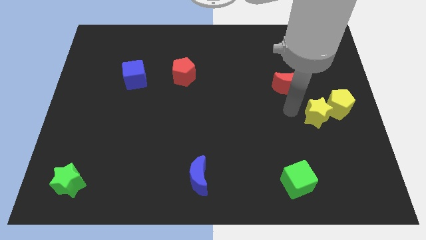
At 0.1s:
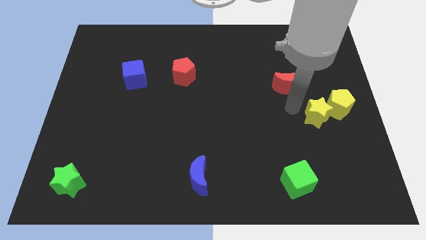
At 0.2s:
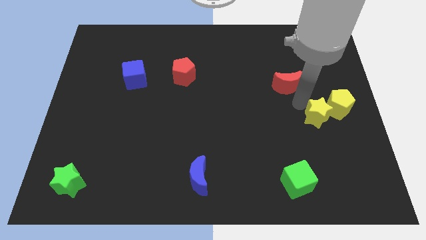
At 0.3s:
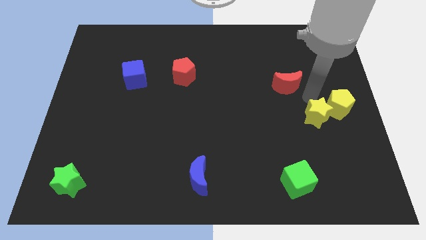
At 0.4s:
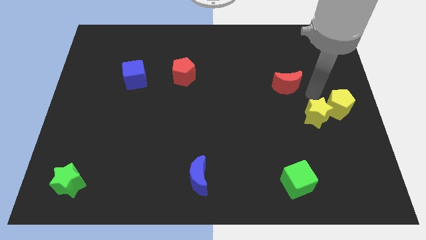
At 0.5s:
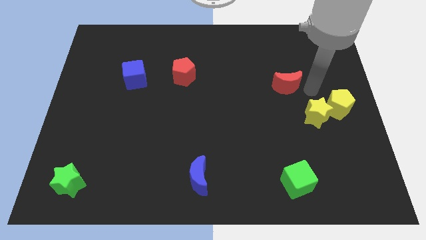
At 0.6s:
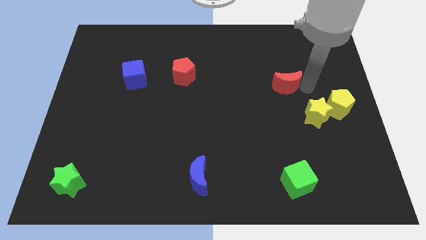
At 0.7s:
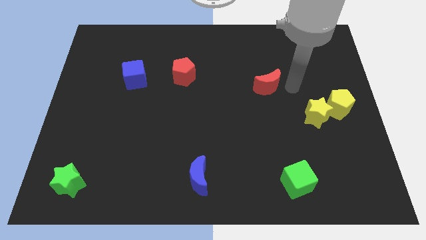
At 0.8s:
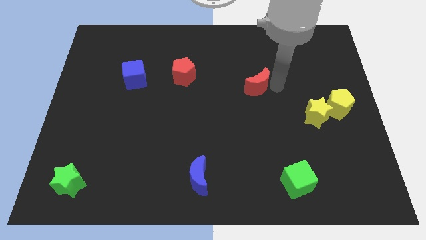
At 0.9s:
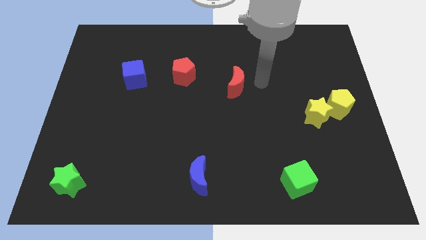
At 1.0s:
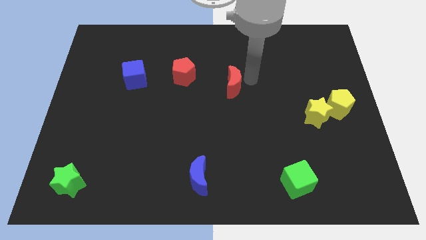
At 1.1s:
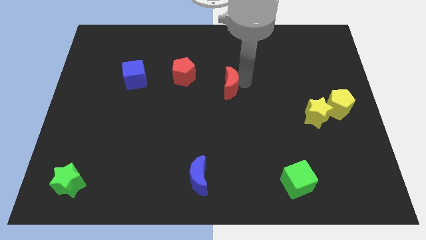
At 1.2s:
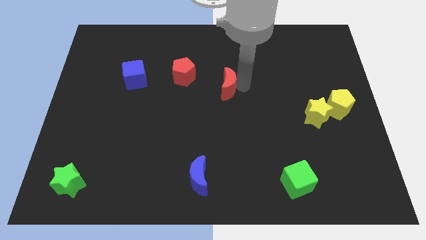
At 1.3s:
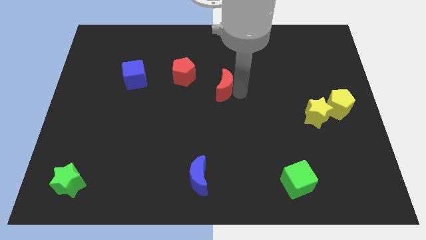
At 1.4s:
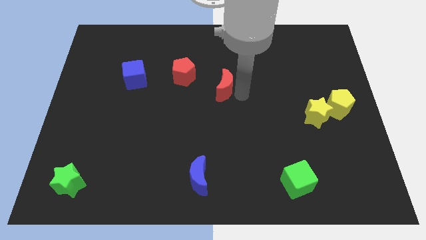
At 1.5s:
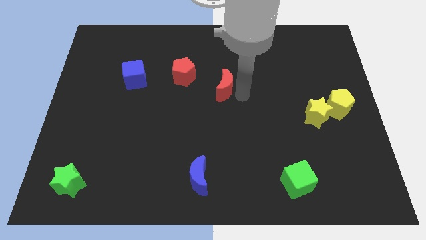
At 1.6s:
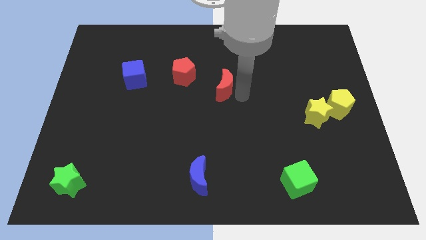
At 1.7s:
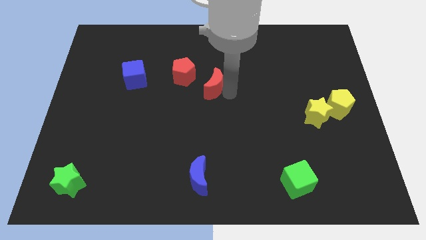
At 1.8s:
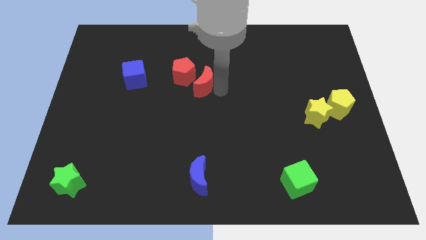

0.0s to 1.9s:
move the red moon to the bottom right side of the red pentagon

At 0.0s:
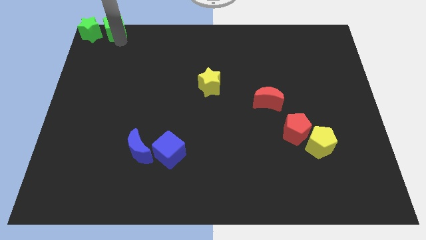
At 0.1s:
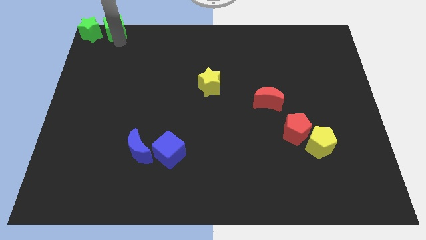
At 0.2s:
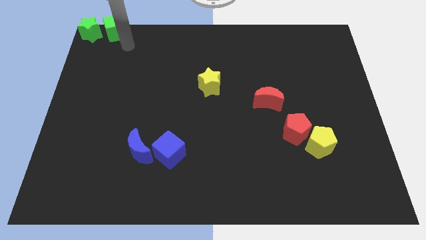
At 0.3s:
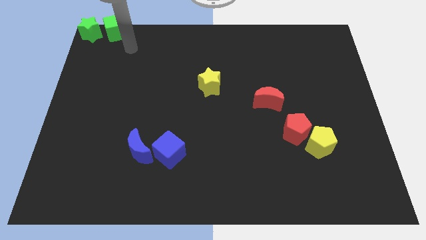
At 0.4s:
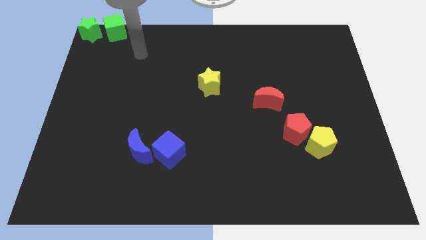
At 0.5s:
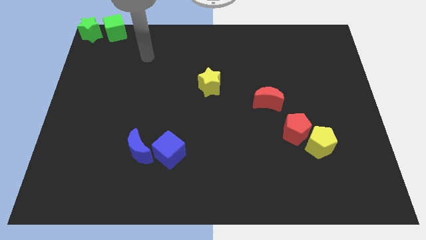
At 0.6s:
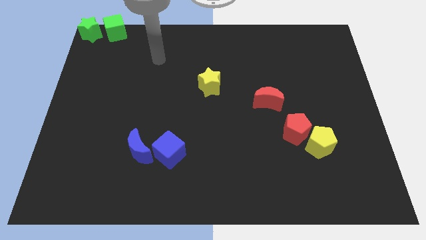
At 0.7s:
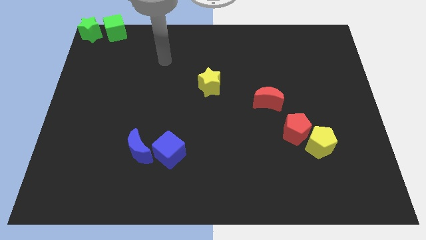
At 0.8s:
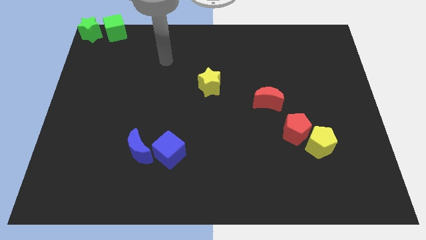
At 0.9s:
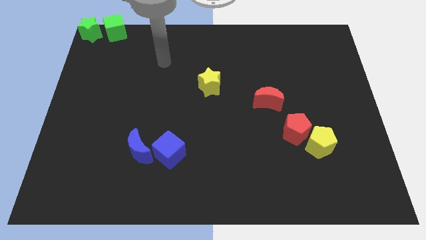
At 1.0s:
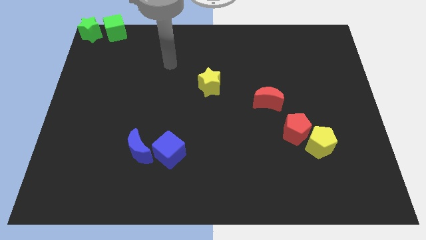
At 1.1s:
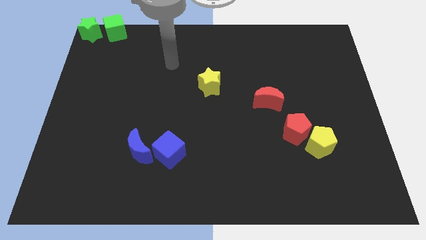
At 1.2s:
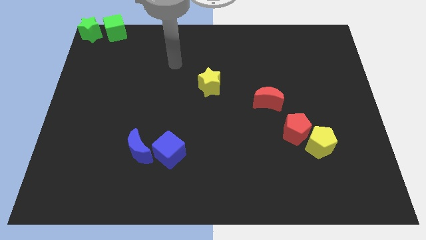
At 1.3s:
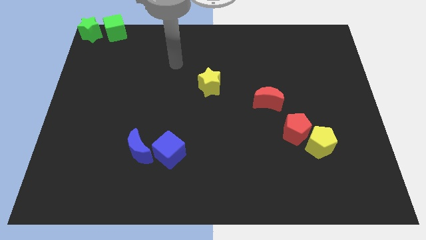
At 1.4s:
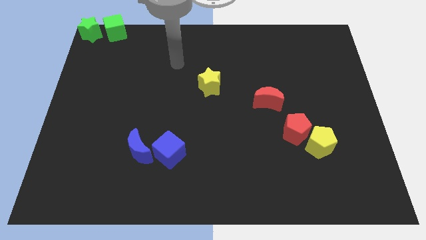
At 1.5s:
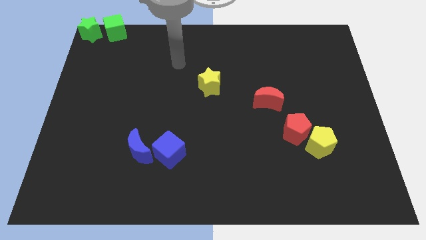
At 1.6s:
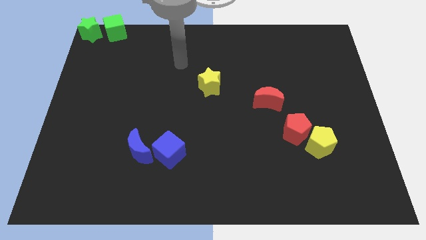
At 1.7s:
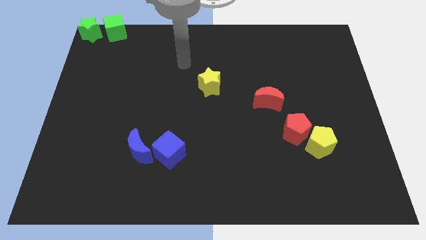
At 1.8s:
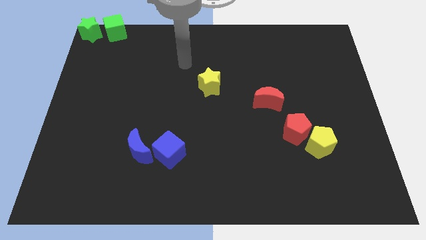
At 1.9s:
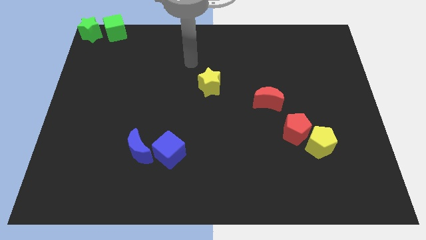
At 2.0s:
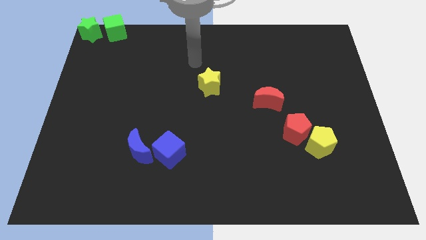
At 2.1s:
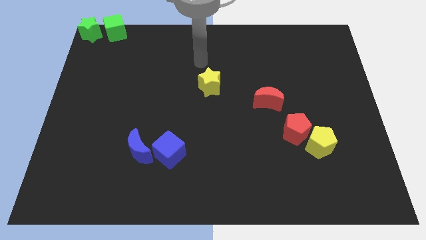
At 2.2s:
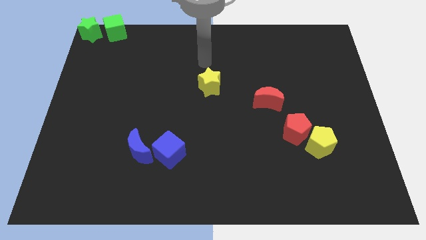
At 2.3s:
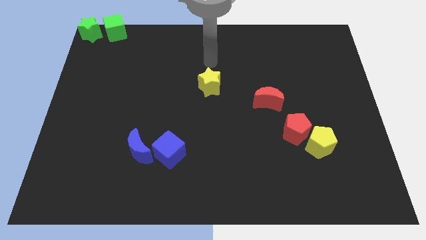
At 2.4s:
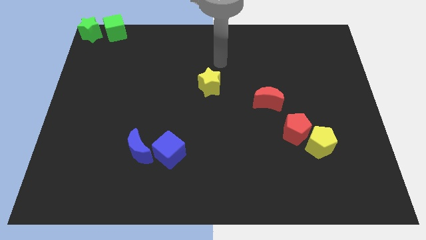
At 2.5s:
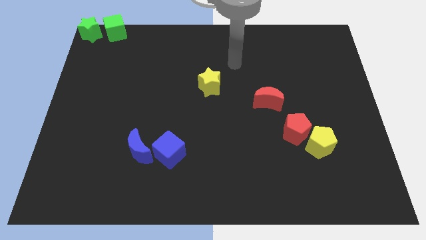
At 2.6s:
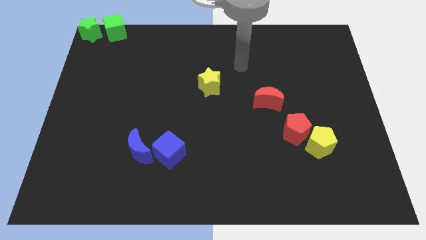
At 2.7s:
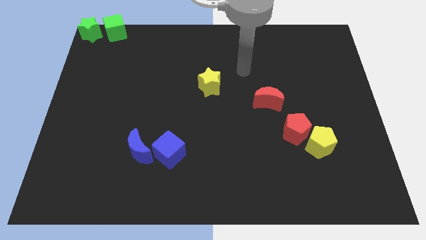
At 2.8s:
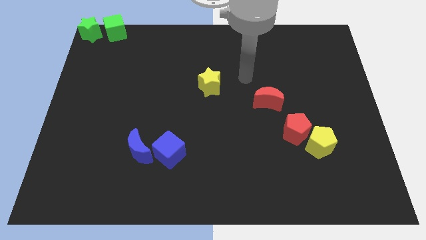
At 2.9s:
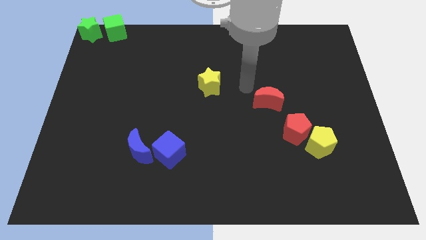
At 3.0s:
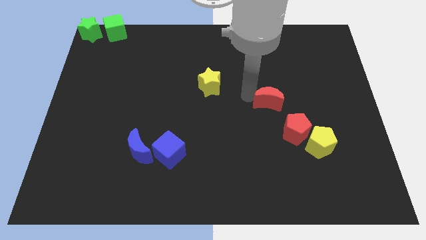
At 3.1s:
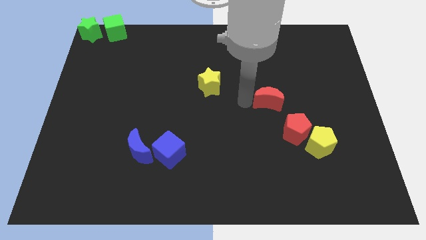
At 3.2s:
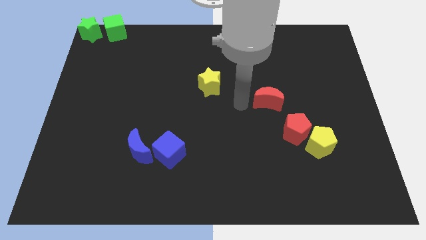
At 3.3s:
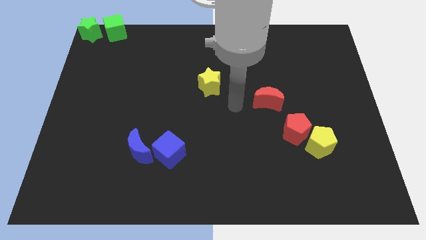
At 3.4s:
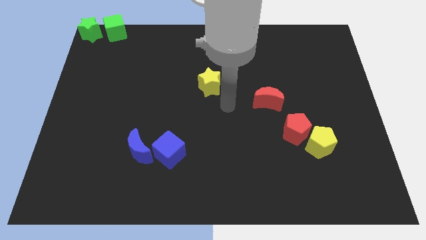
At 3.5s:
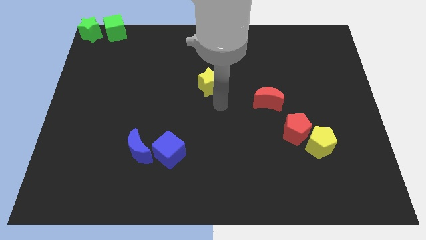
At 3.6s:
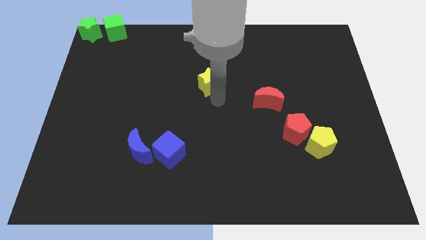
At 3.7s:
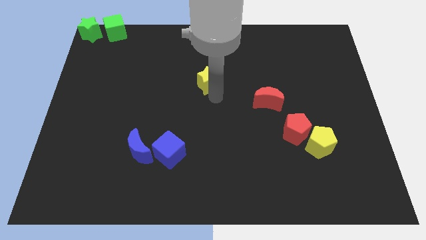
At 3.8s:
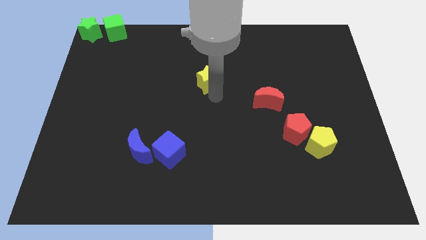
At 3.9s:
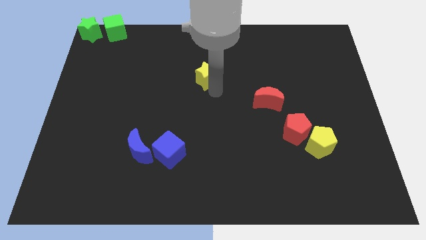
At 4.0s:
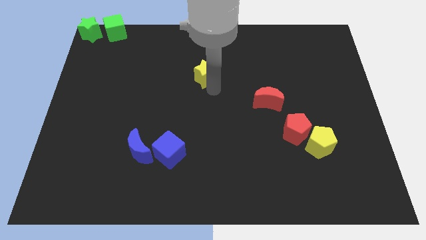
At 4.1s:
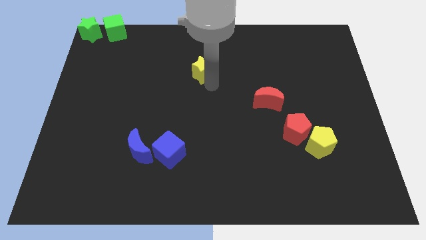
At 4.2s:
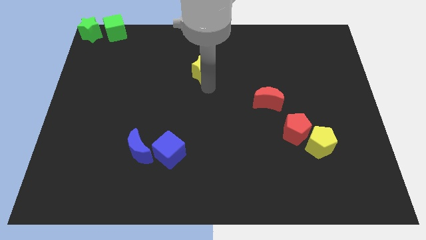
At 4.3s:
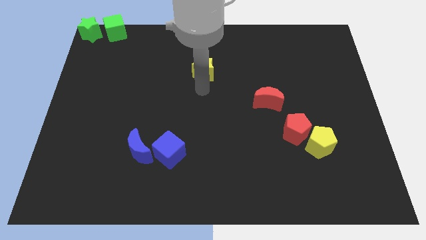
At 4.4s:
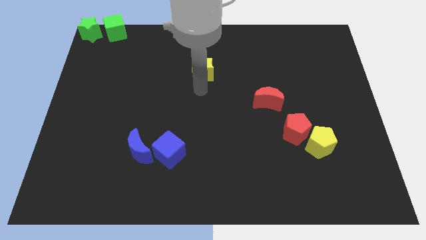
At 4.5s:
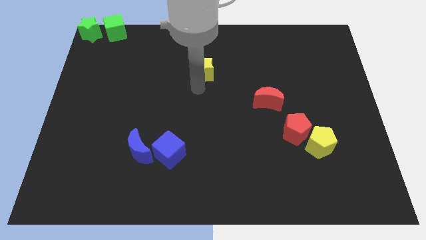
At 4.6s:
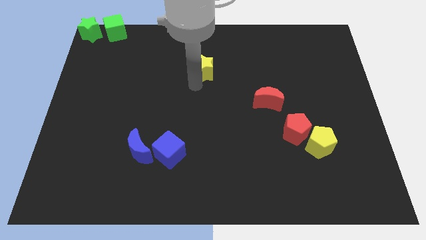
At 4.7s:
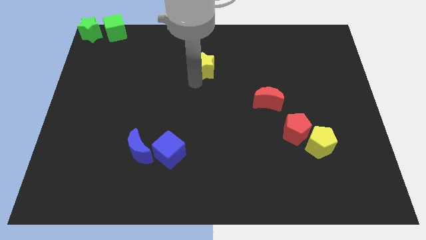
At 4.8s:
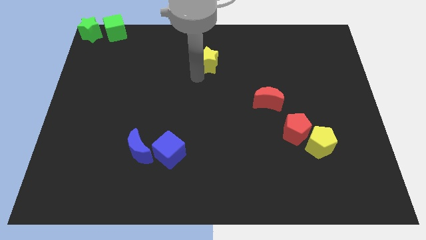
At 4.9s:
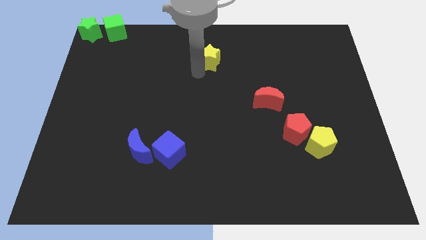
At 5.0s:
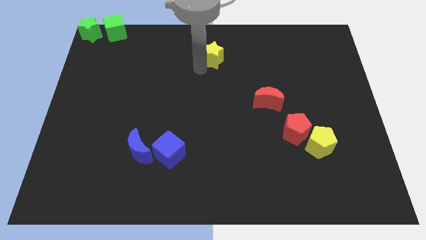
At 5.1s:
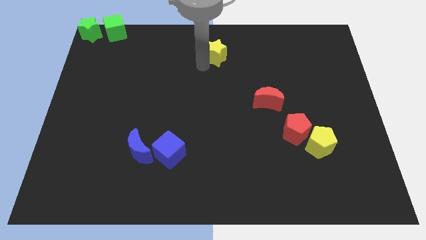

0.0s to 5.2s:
push the yellow star upward

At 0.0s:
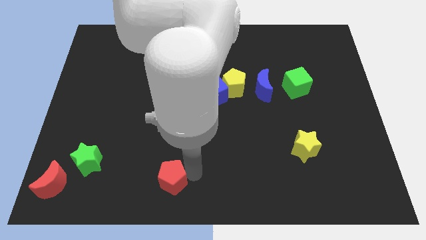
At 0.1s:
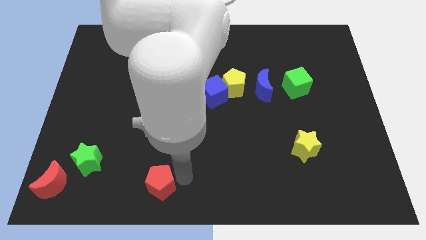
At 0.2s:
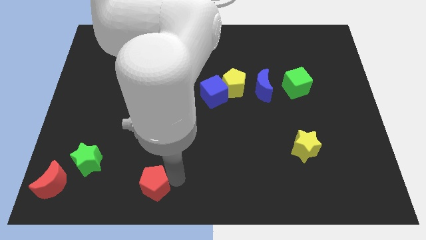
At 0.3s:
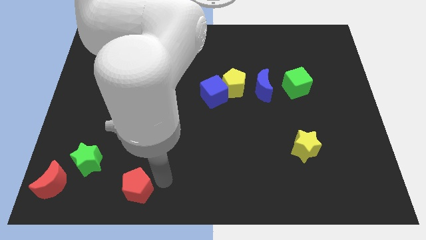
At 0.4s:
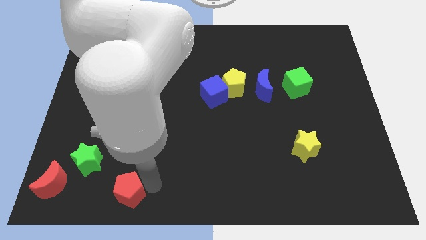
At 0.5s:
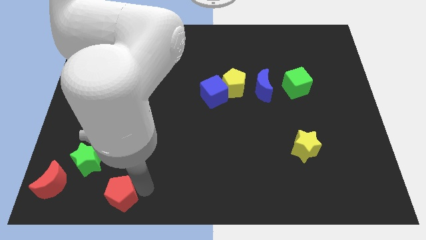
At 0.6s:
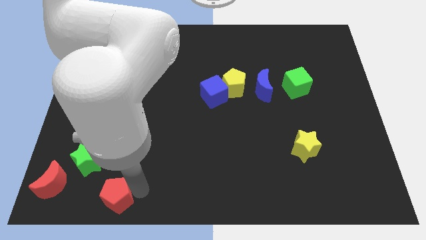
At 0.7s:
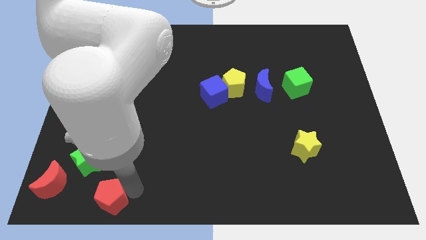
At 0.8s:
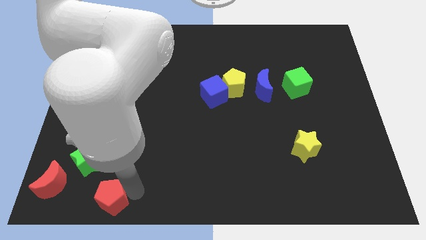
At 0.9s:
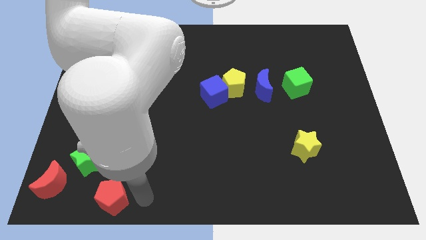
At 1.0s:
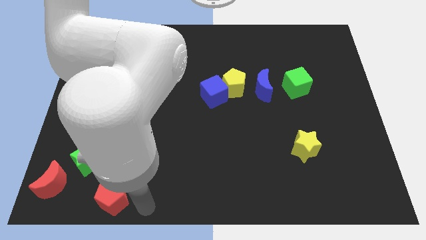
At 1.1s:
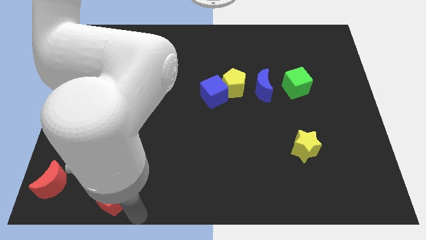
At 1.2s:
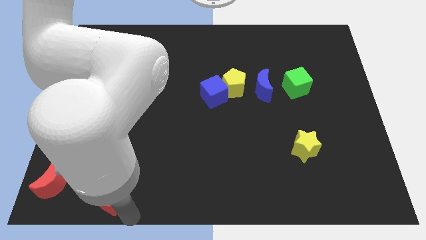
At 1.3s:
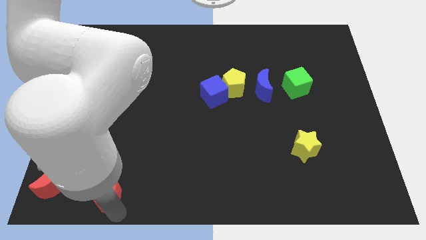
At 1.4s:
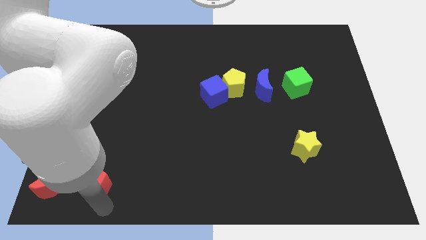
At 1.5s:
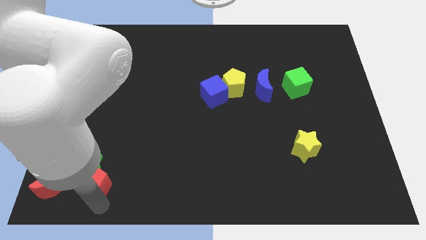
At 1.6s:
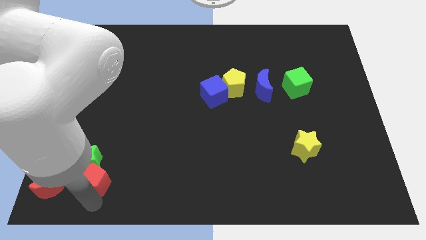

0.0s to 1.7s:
push red pentagon into green star

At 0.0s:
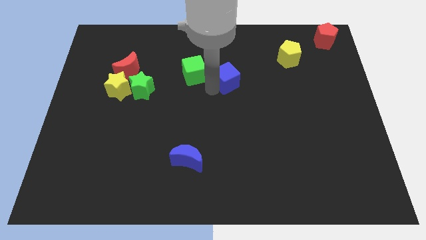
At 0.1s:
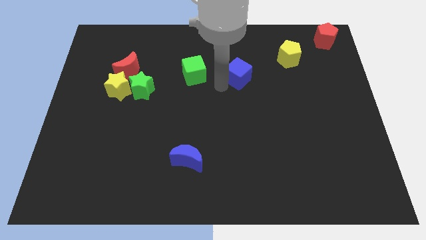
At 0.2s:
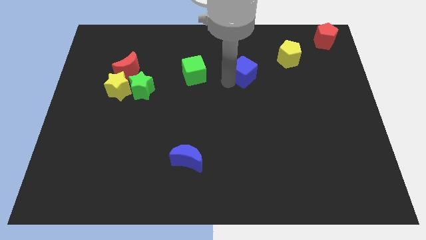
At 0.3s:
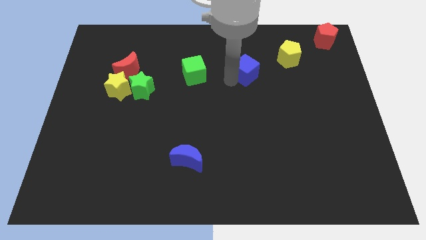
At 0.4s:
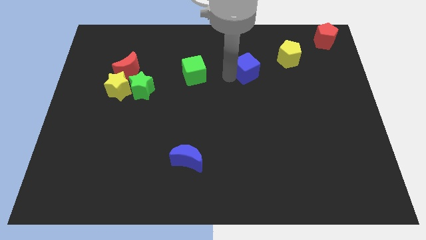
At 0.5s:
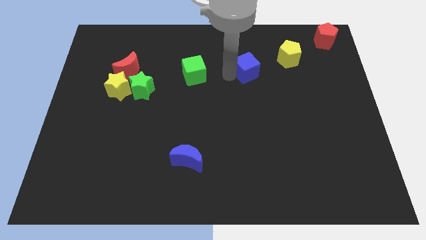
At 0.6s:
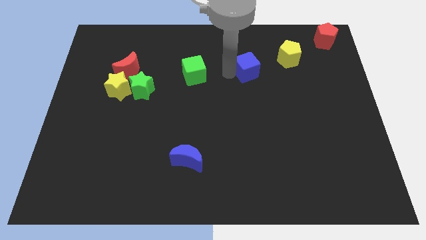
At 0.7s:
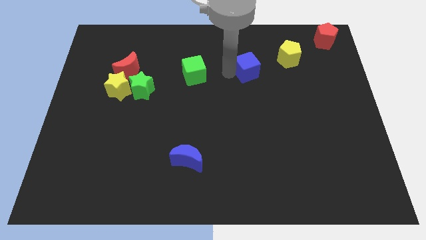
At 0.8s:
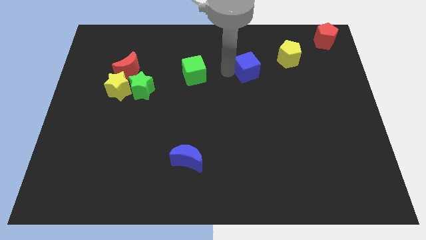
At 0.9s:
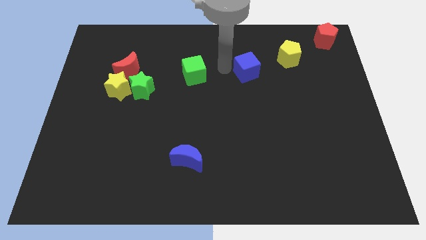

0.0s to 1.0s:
separate blue block from green block
